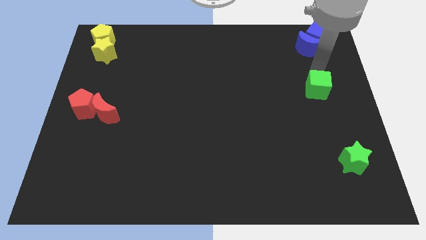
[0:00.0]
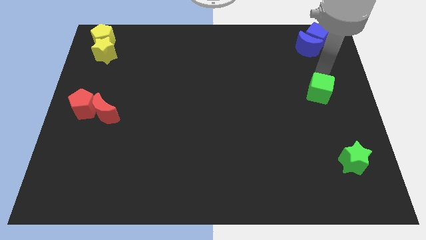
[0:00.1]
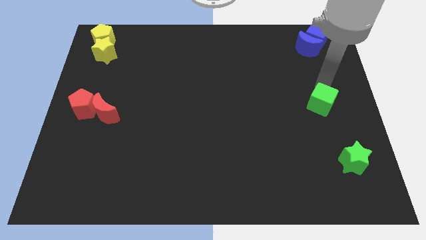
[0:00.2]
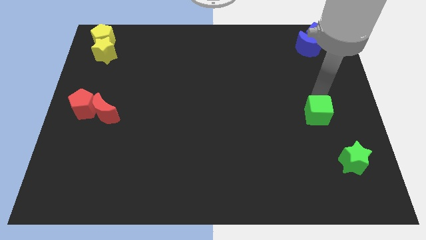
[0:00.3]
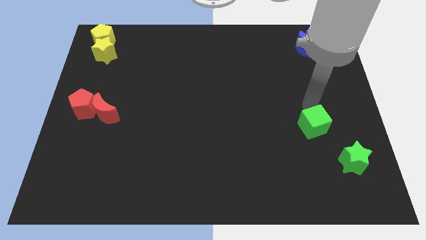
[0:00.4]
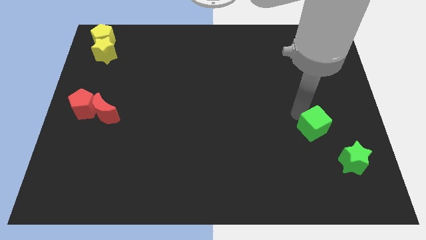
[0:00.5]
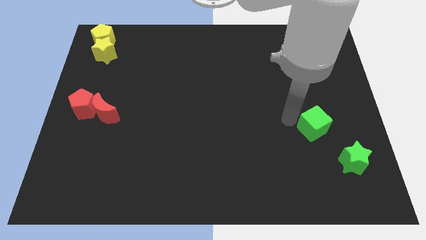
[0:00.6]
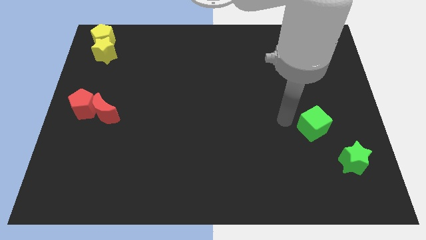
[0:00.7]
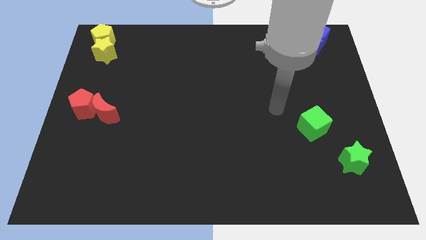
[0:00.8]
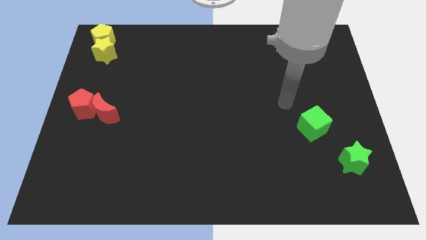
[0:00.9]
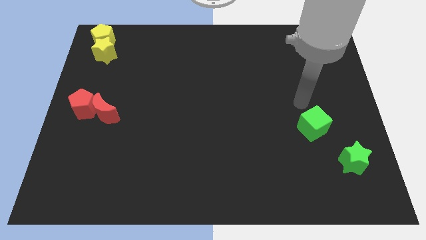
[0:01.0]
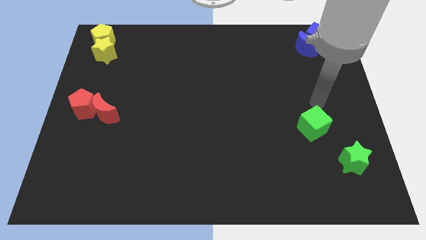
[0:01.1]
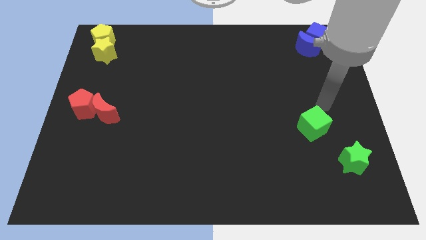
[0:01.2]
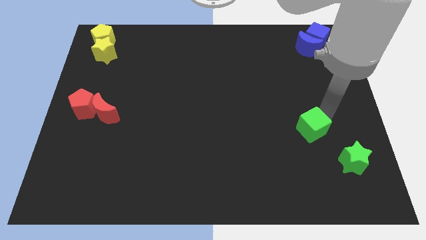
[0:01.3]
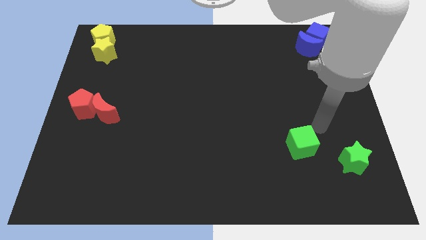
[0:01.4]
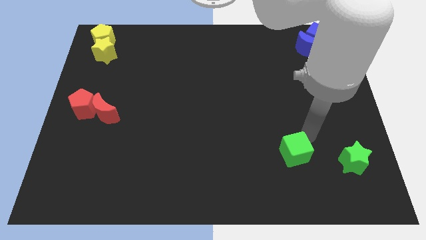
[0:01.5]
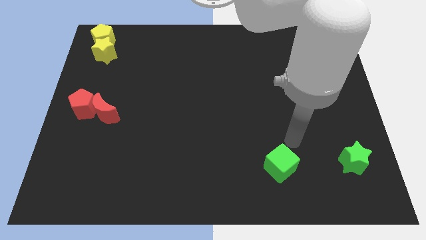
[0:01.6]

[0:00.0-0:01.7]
move green cube to the bottom of the board

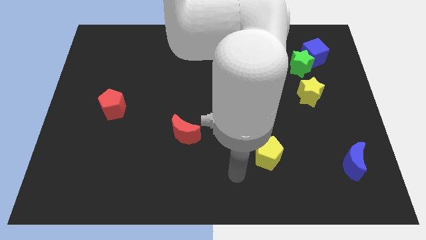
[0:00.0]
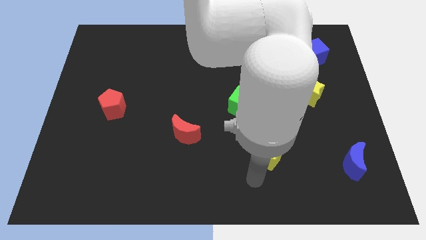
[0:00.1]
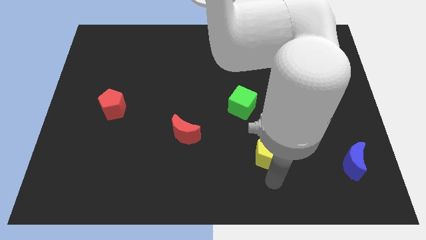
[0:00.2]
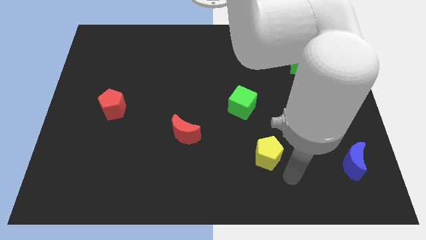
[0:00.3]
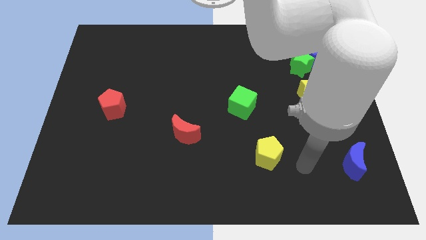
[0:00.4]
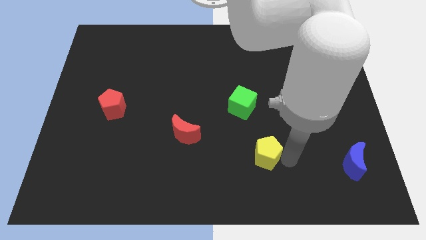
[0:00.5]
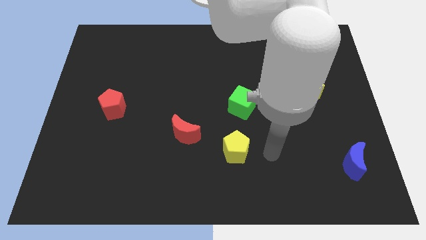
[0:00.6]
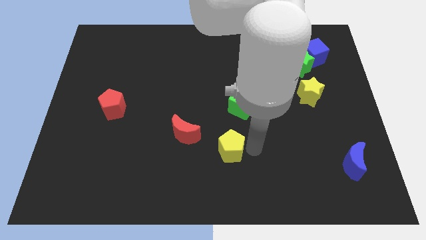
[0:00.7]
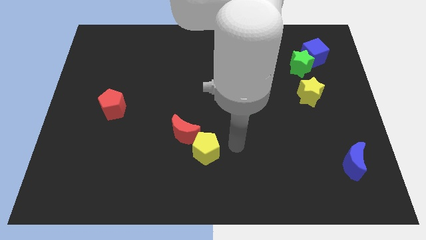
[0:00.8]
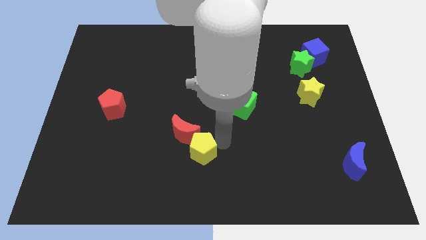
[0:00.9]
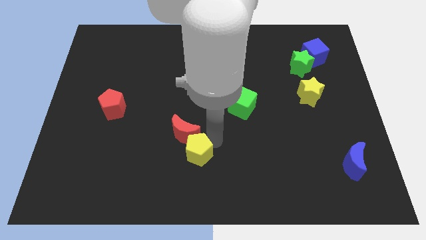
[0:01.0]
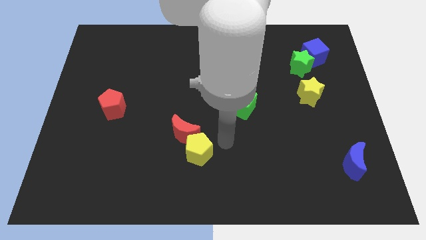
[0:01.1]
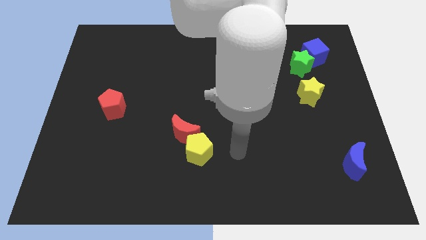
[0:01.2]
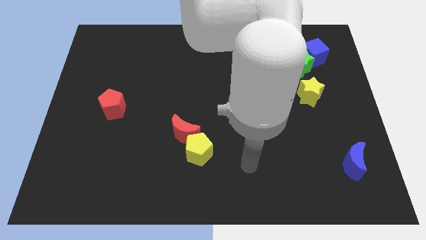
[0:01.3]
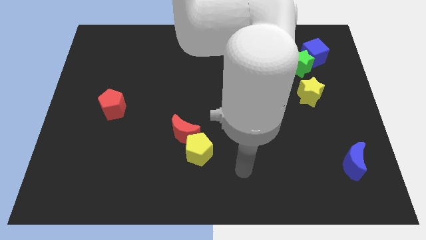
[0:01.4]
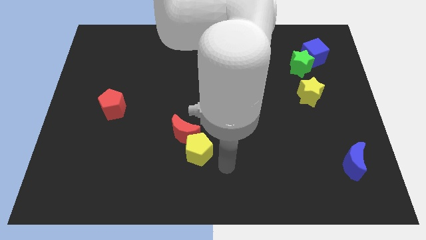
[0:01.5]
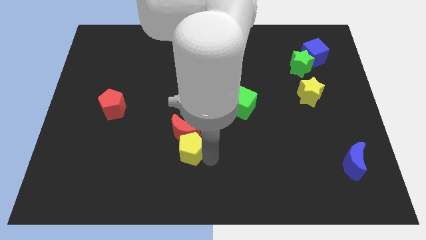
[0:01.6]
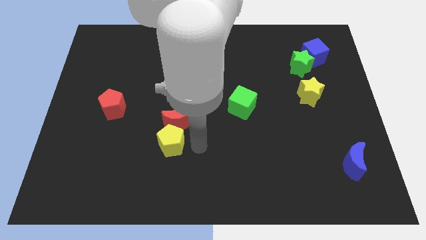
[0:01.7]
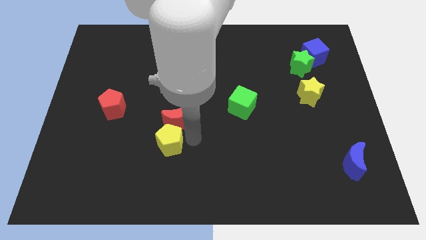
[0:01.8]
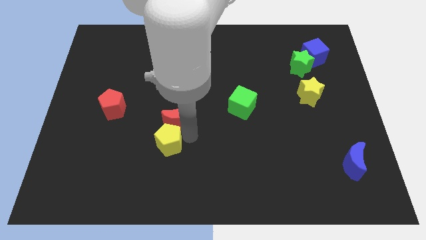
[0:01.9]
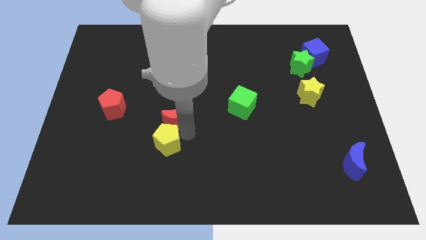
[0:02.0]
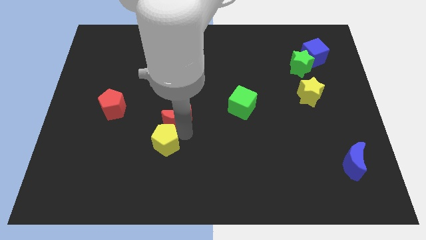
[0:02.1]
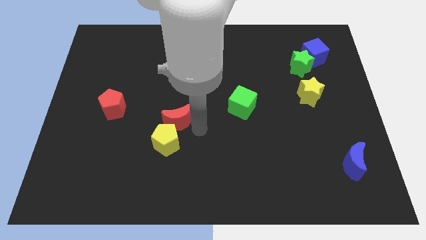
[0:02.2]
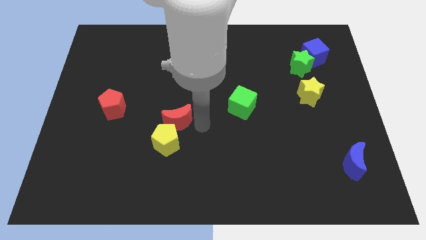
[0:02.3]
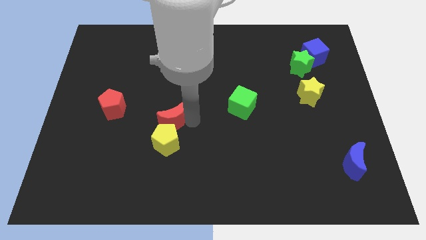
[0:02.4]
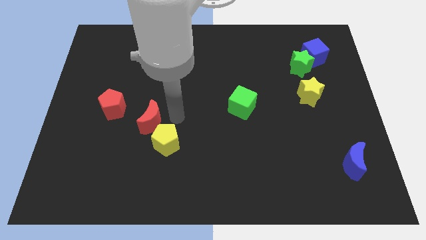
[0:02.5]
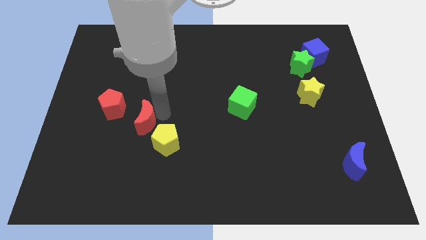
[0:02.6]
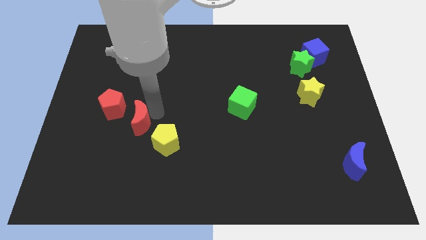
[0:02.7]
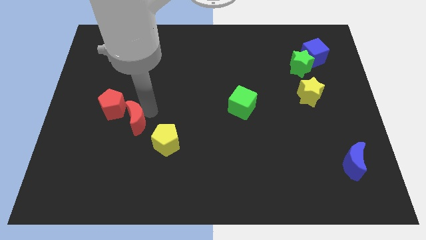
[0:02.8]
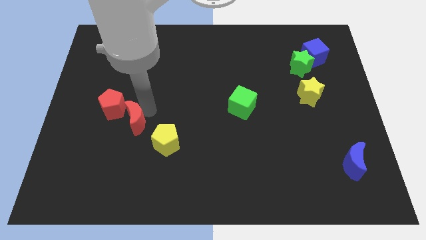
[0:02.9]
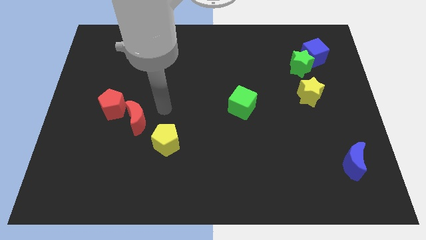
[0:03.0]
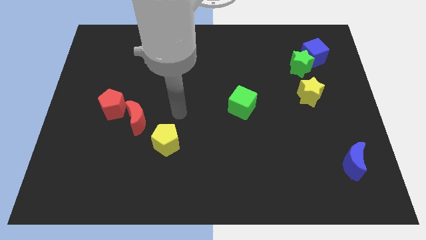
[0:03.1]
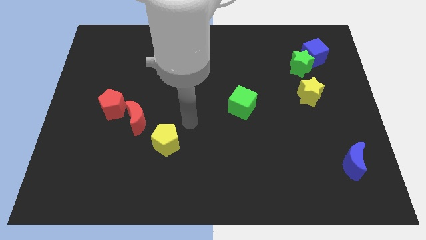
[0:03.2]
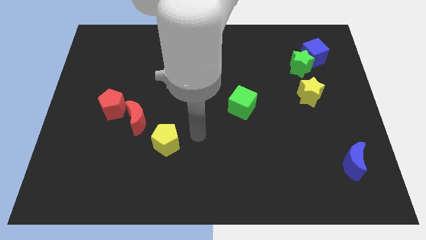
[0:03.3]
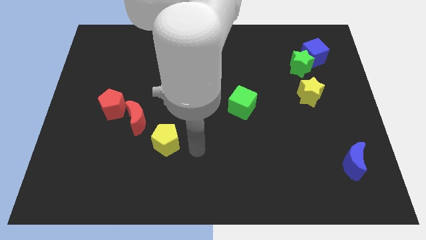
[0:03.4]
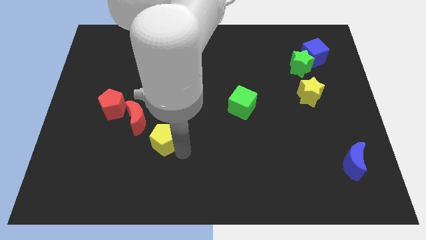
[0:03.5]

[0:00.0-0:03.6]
place the red crescent and yellow pentagon diagonal bottom right of the red pentagon

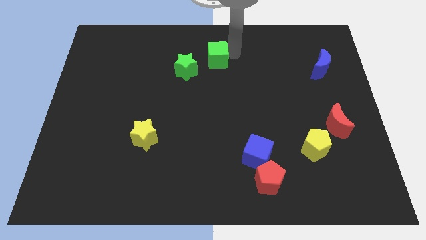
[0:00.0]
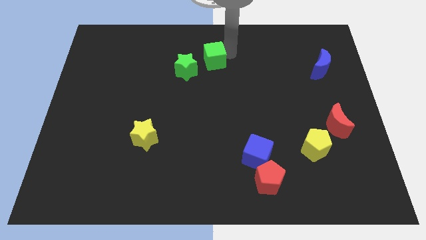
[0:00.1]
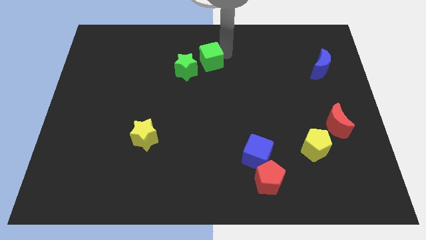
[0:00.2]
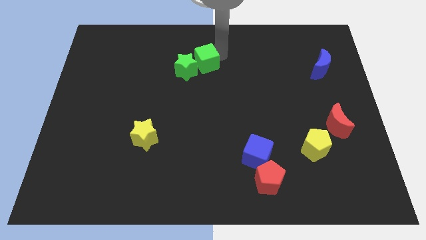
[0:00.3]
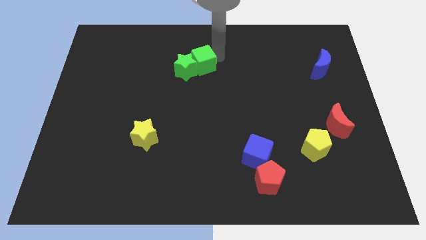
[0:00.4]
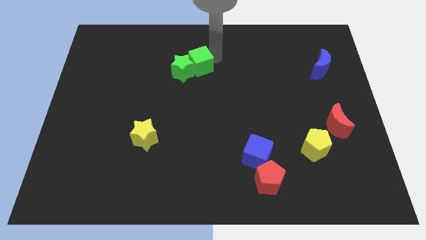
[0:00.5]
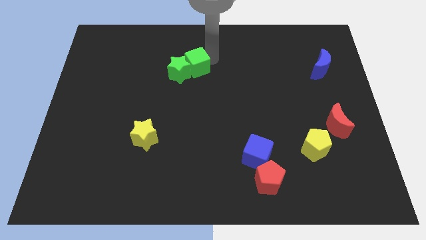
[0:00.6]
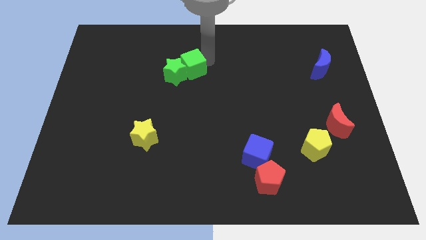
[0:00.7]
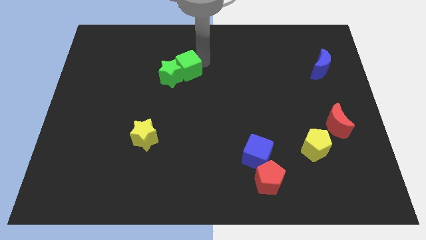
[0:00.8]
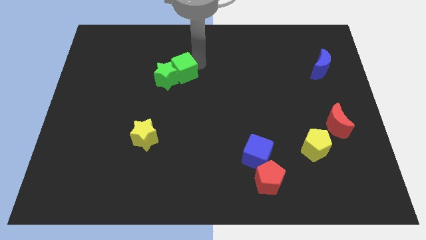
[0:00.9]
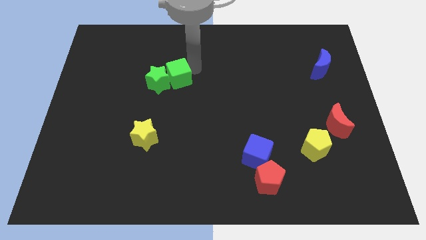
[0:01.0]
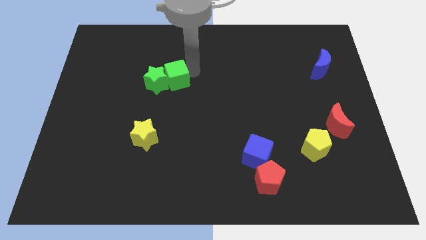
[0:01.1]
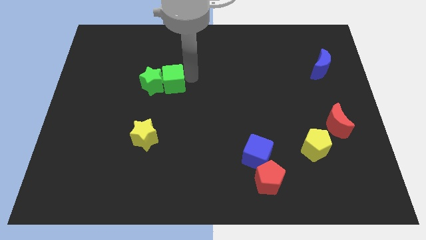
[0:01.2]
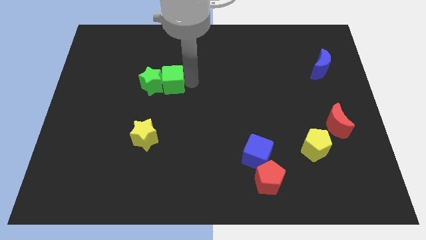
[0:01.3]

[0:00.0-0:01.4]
push the green star slightly with green cube

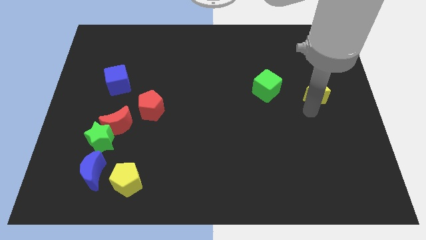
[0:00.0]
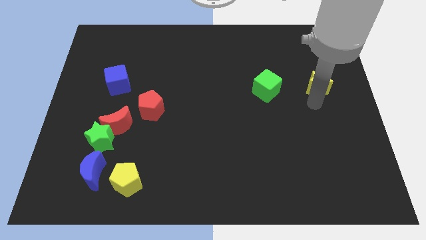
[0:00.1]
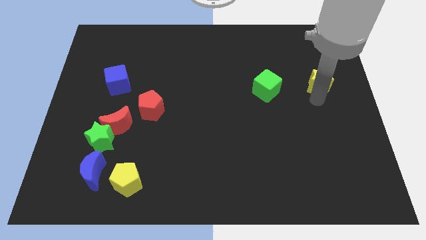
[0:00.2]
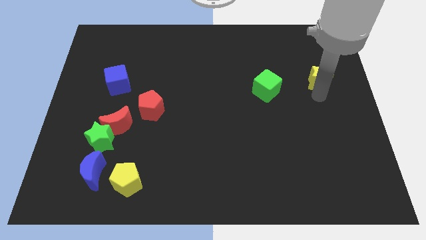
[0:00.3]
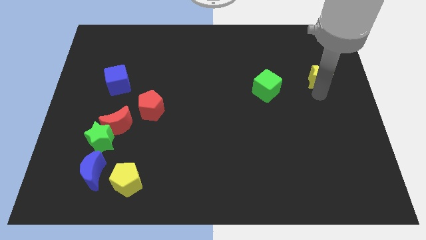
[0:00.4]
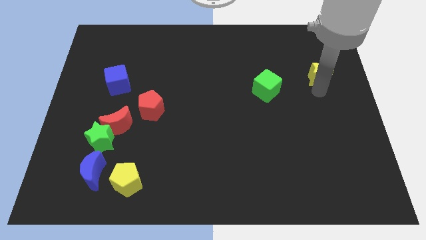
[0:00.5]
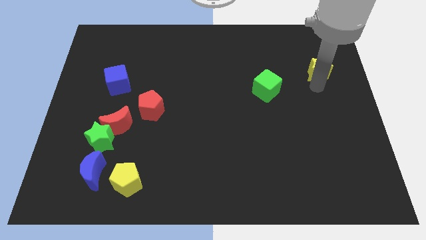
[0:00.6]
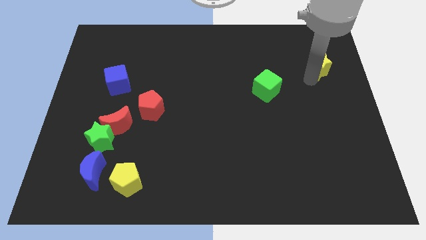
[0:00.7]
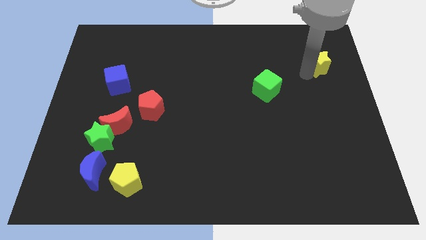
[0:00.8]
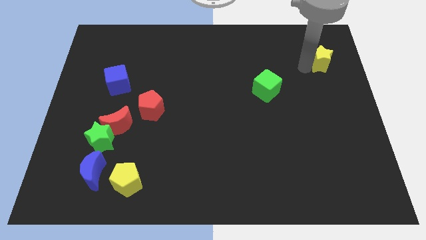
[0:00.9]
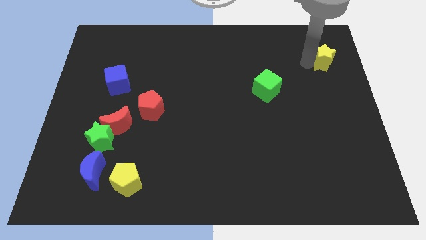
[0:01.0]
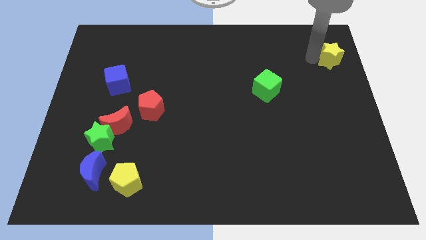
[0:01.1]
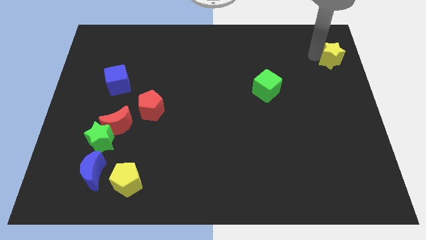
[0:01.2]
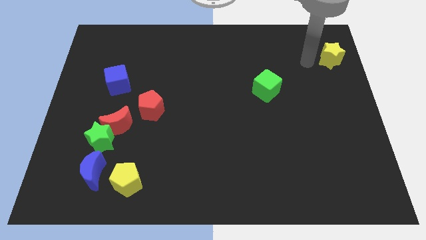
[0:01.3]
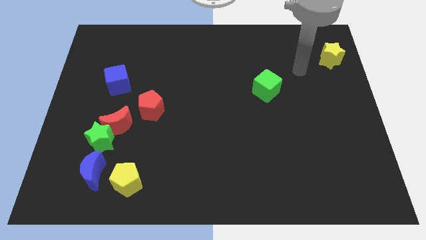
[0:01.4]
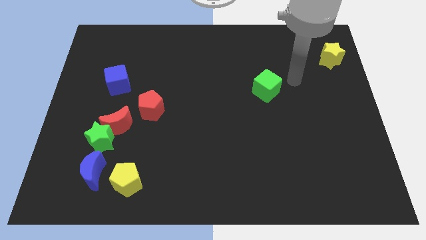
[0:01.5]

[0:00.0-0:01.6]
push the yellow star diagonally at the top right of the green cube

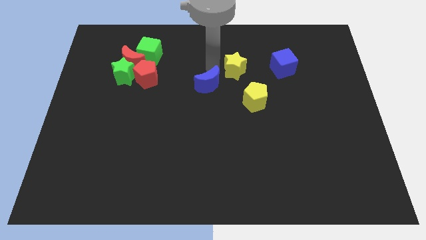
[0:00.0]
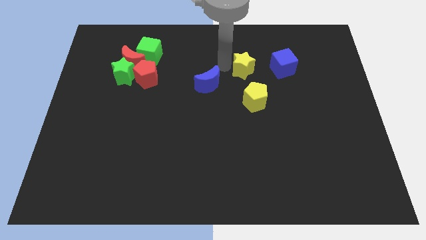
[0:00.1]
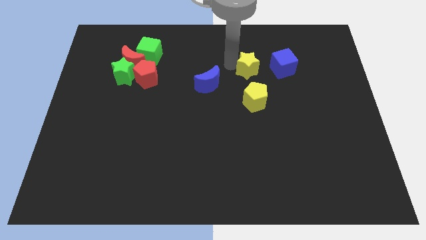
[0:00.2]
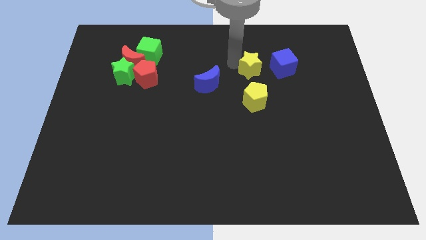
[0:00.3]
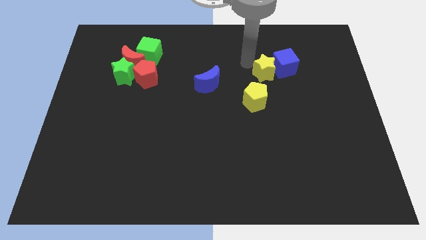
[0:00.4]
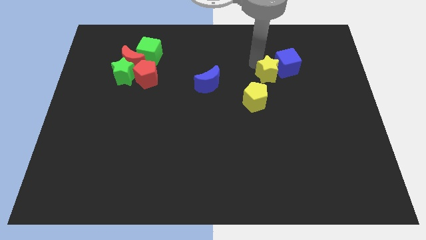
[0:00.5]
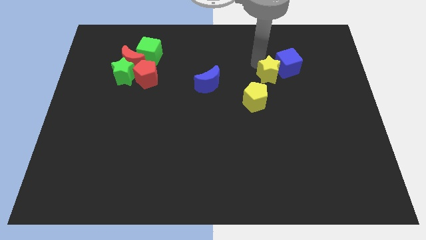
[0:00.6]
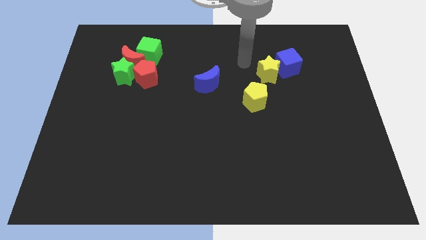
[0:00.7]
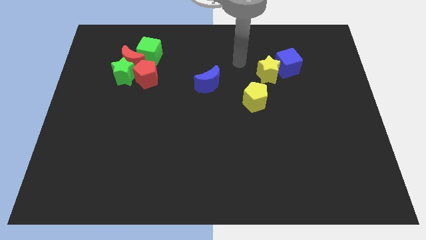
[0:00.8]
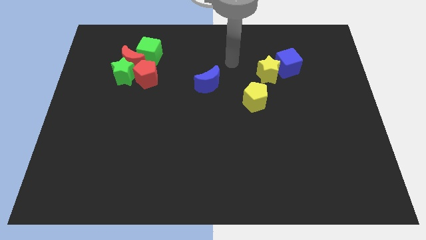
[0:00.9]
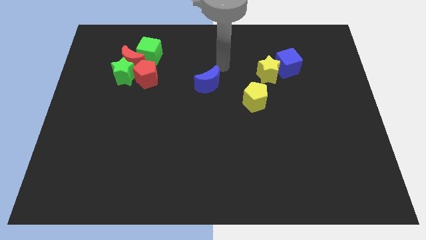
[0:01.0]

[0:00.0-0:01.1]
push the yellow star into the blue cube
